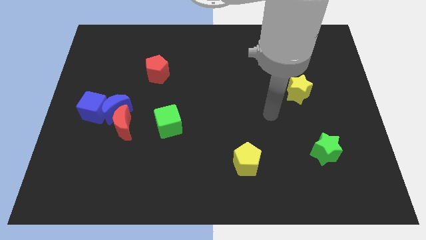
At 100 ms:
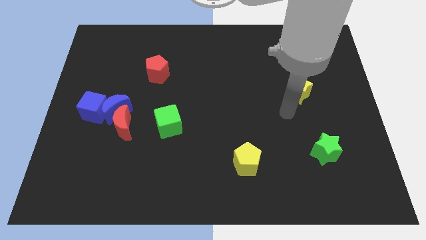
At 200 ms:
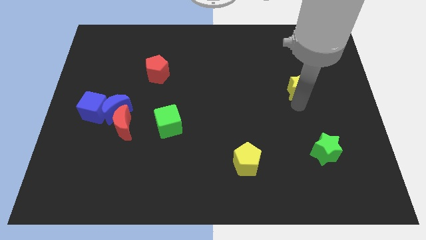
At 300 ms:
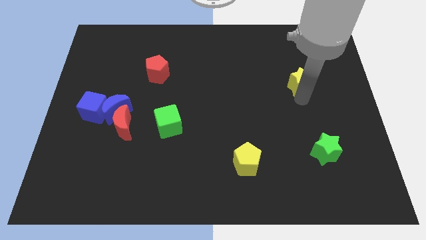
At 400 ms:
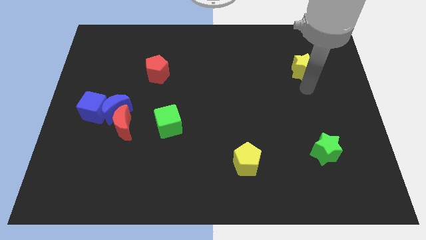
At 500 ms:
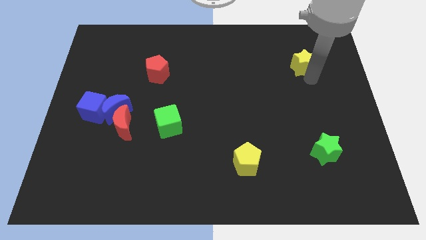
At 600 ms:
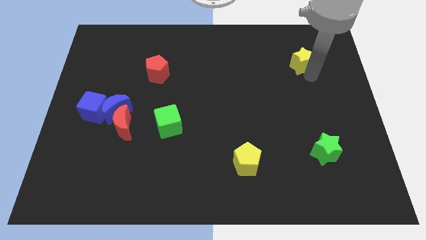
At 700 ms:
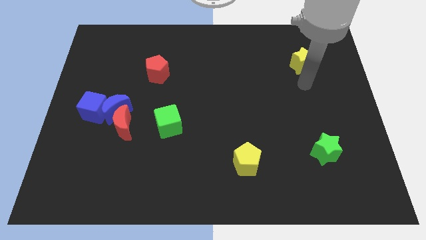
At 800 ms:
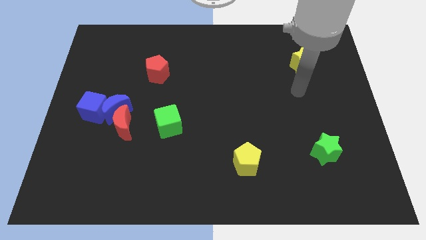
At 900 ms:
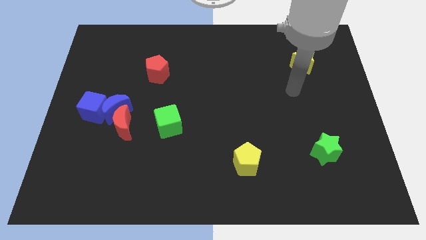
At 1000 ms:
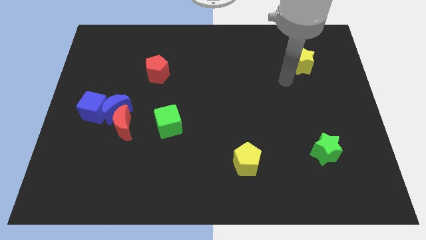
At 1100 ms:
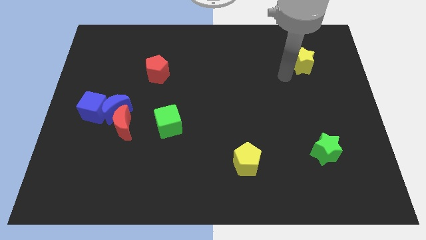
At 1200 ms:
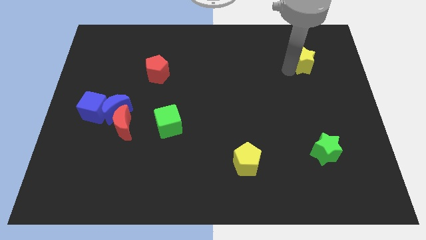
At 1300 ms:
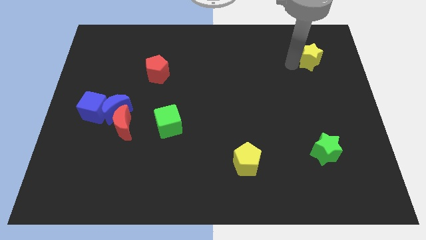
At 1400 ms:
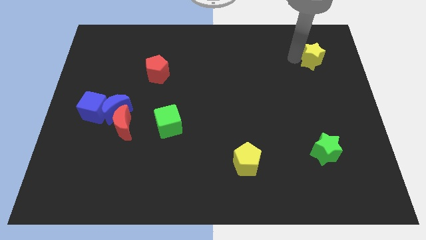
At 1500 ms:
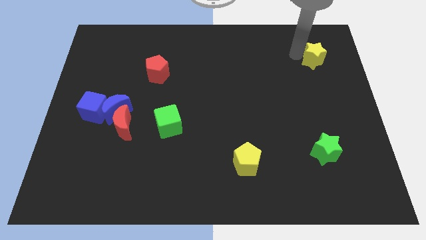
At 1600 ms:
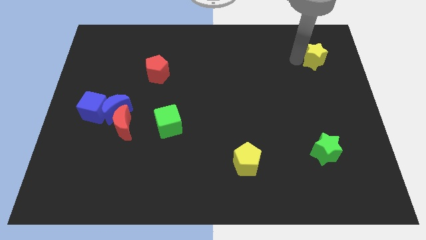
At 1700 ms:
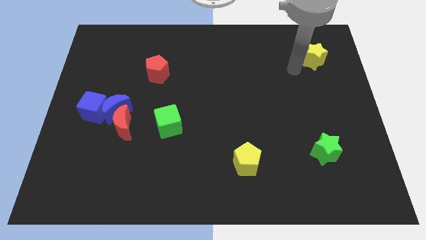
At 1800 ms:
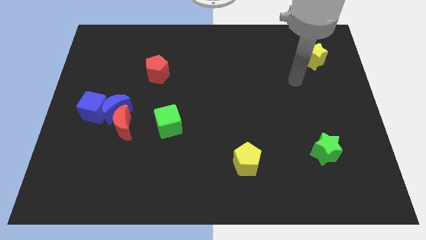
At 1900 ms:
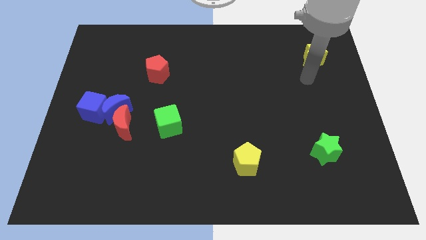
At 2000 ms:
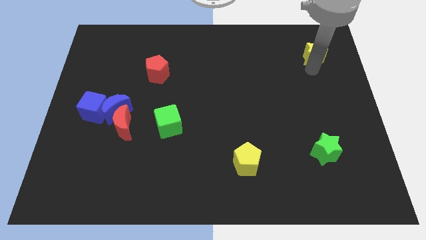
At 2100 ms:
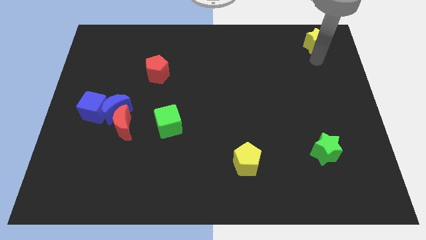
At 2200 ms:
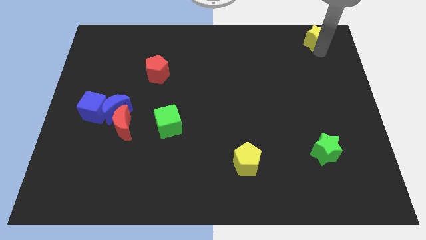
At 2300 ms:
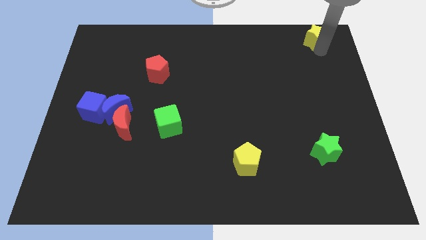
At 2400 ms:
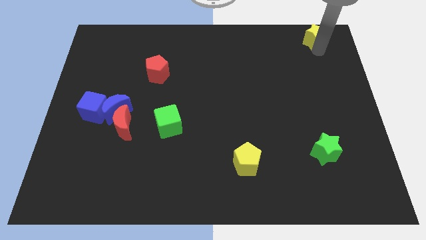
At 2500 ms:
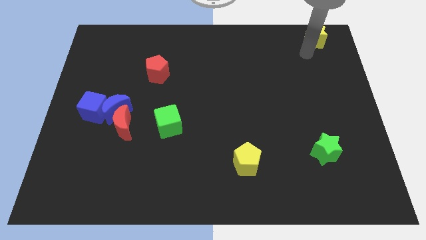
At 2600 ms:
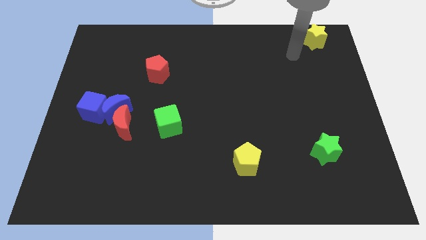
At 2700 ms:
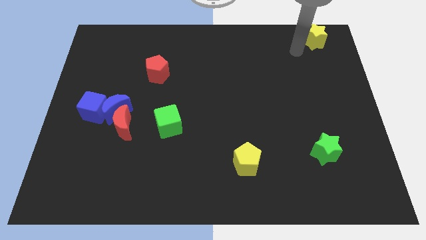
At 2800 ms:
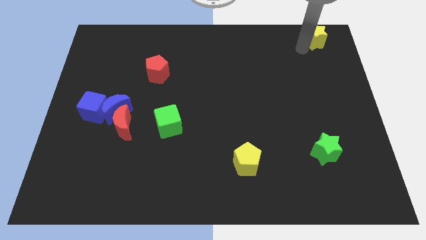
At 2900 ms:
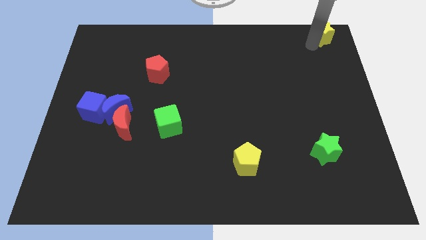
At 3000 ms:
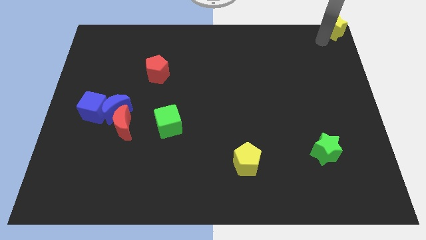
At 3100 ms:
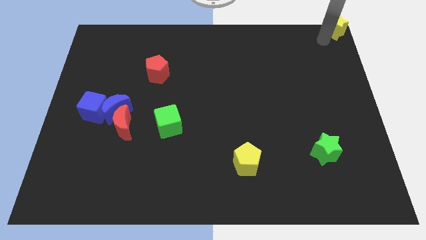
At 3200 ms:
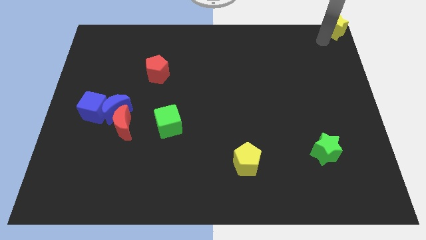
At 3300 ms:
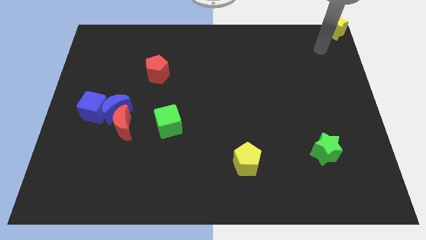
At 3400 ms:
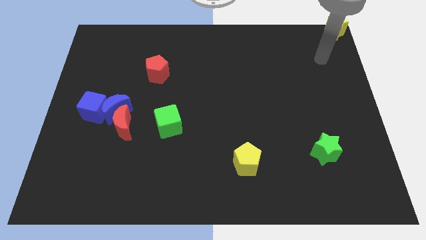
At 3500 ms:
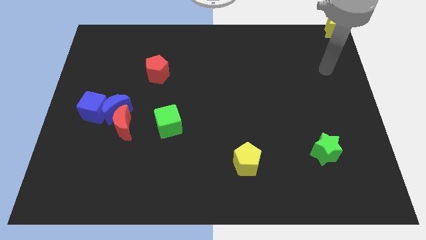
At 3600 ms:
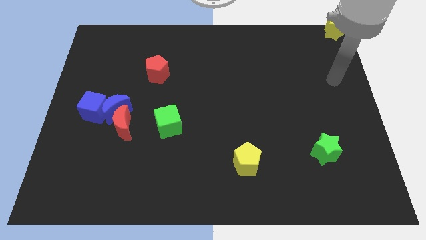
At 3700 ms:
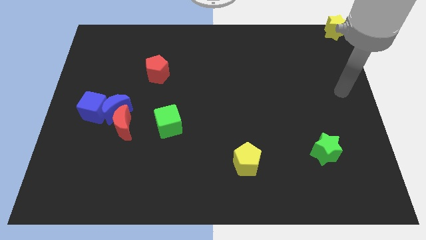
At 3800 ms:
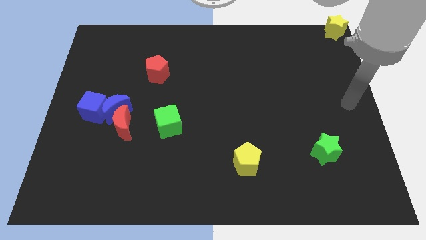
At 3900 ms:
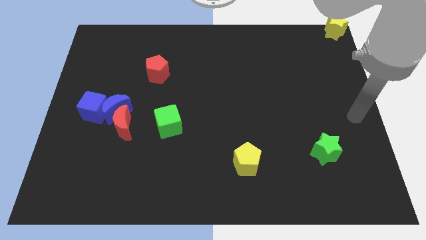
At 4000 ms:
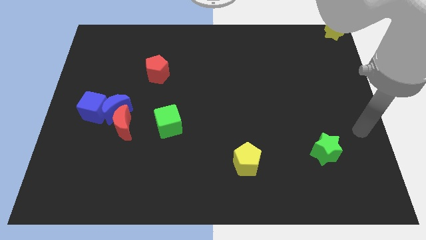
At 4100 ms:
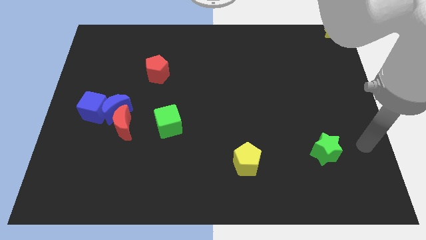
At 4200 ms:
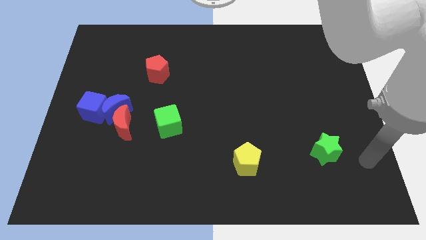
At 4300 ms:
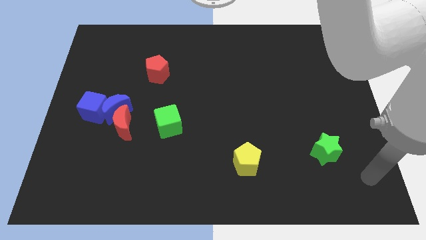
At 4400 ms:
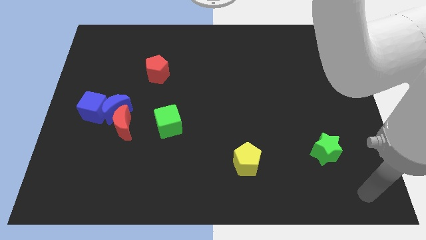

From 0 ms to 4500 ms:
slide the yellow star to the top right corner

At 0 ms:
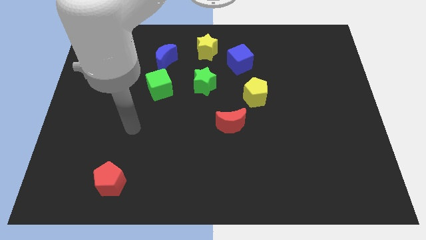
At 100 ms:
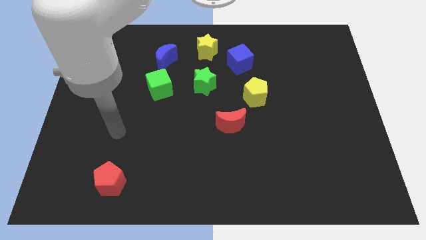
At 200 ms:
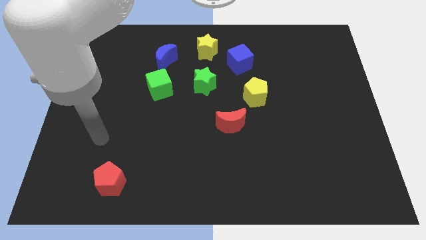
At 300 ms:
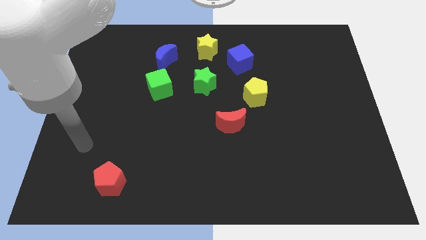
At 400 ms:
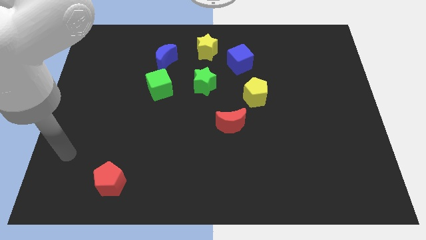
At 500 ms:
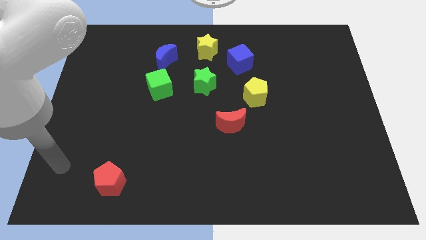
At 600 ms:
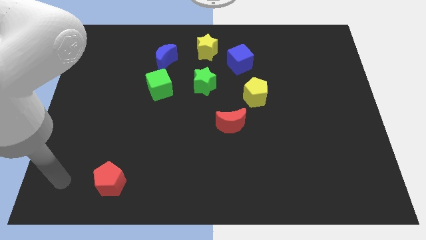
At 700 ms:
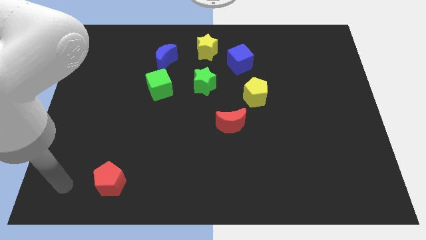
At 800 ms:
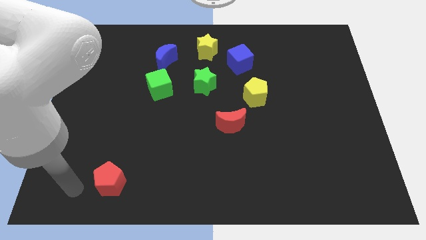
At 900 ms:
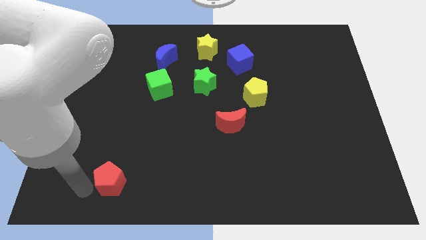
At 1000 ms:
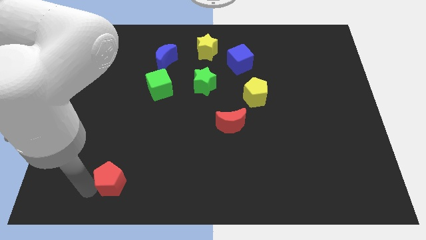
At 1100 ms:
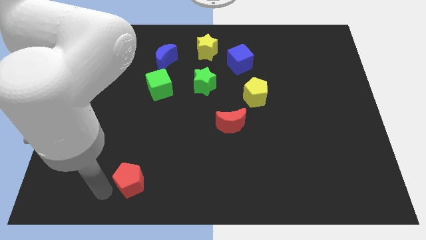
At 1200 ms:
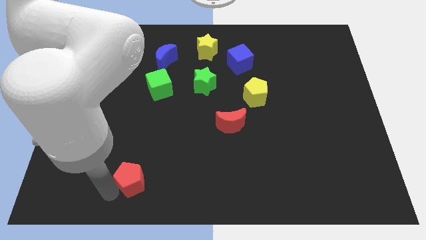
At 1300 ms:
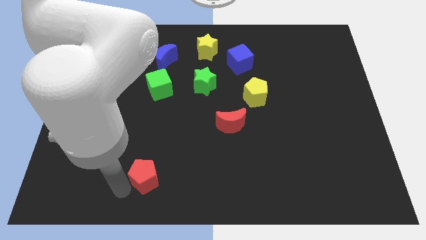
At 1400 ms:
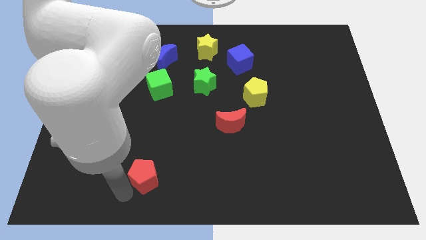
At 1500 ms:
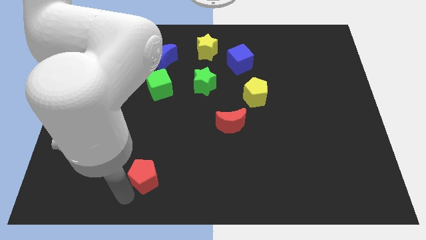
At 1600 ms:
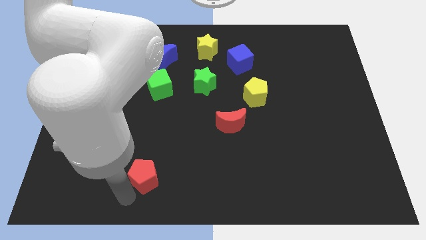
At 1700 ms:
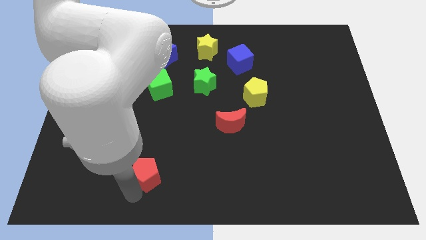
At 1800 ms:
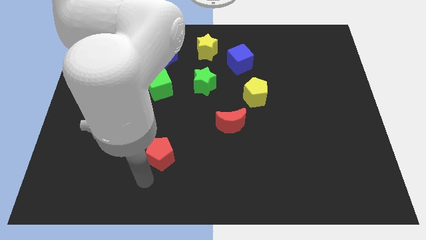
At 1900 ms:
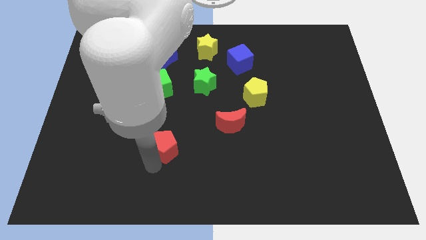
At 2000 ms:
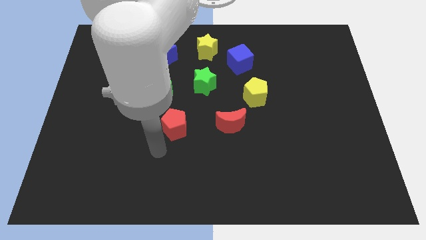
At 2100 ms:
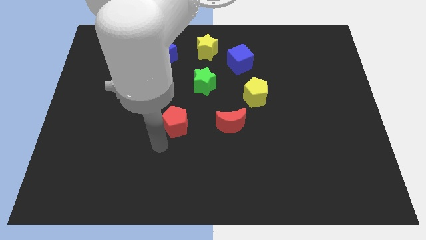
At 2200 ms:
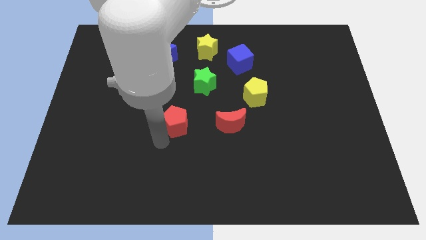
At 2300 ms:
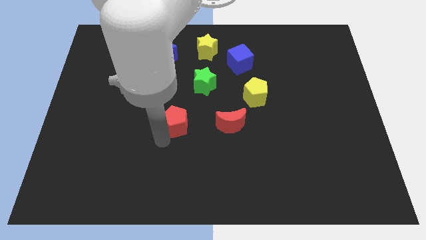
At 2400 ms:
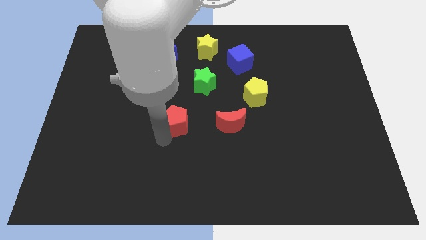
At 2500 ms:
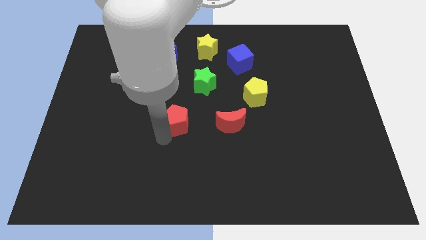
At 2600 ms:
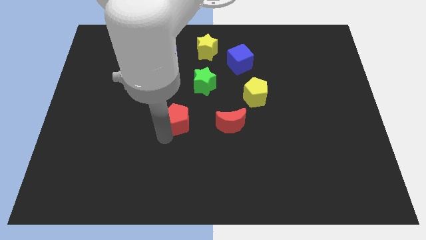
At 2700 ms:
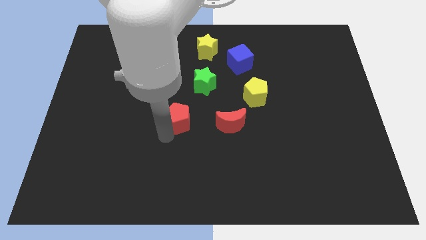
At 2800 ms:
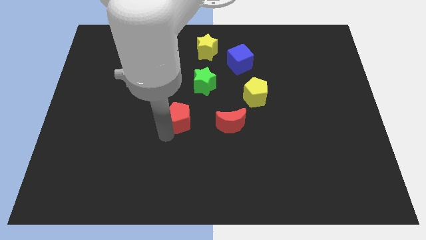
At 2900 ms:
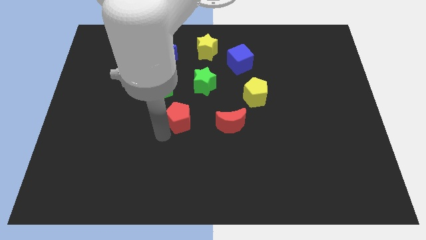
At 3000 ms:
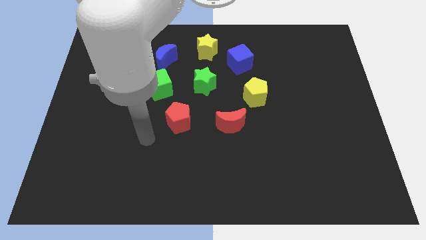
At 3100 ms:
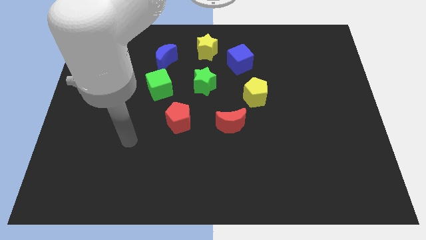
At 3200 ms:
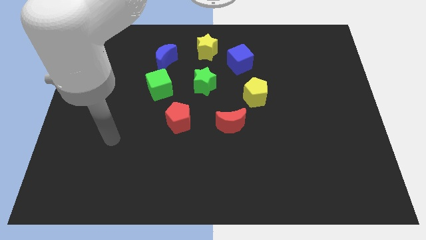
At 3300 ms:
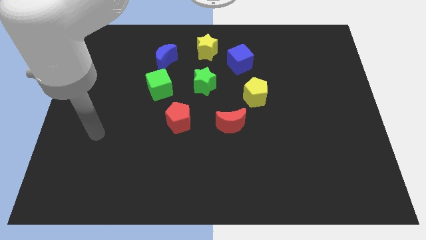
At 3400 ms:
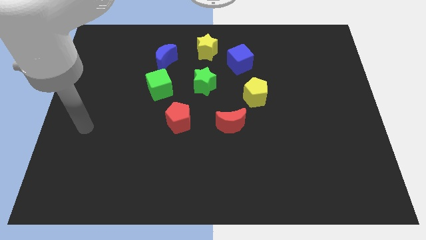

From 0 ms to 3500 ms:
move red pentagon into group of blocks to form a circle

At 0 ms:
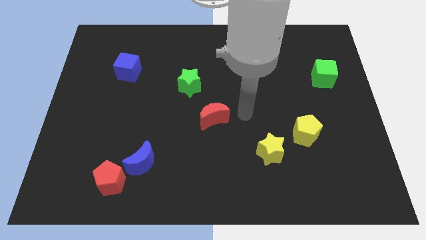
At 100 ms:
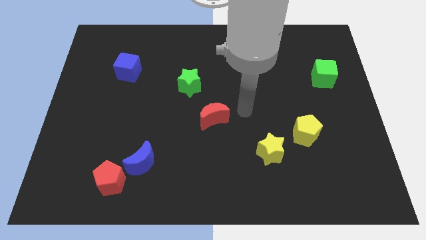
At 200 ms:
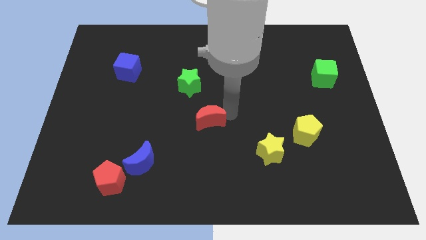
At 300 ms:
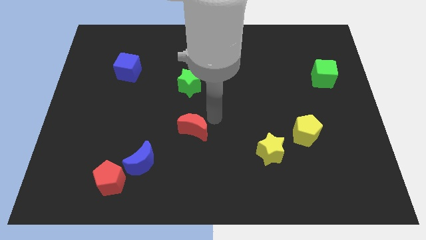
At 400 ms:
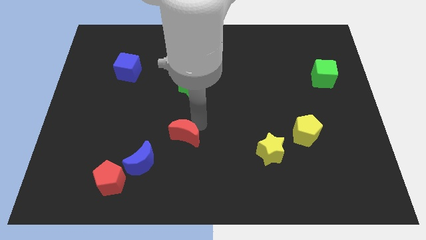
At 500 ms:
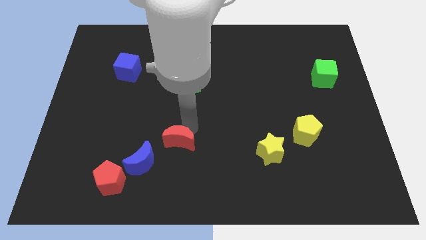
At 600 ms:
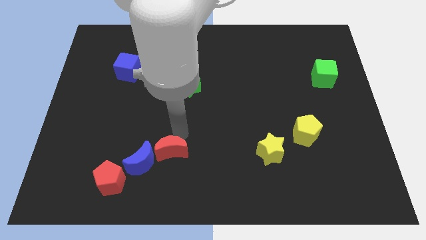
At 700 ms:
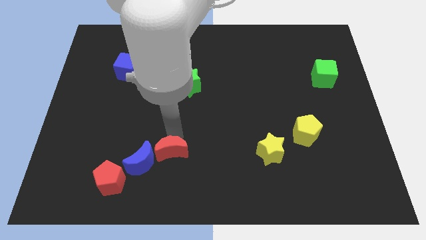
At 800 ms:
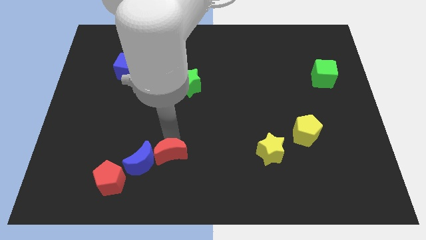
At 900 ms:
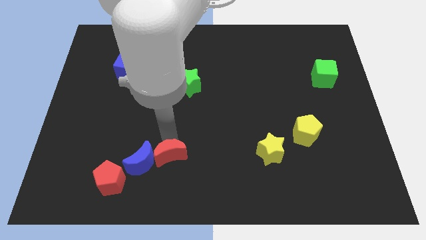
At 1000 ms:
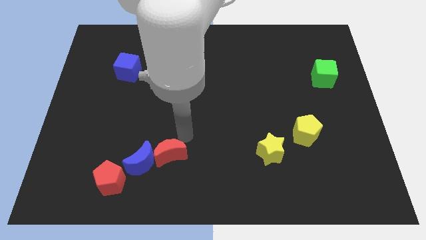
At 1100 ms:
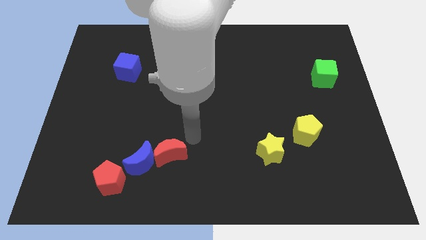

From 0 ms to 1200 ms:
push the red crescent close to the blue crescent
